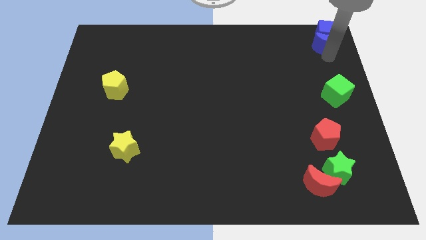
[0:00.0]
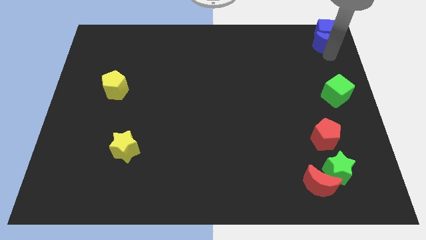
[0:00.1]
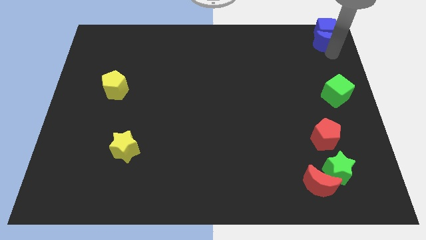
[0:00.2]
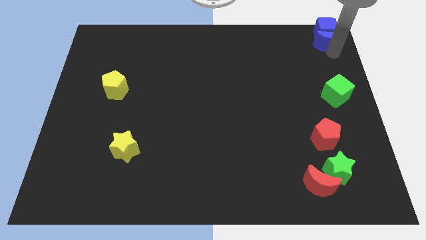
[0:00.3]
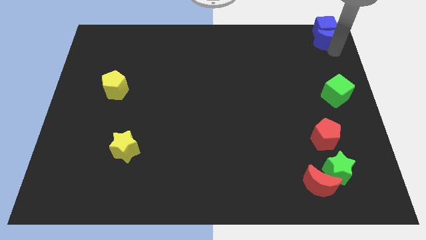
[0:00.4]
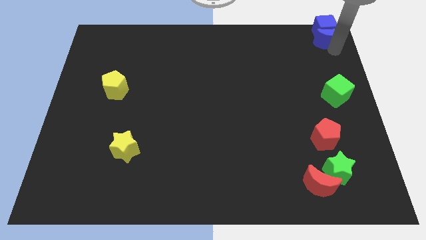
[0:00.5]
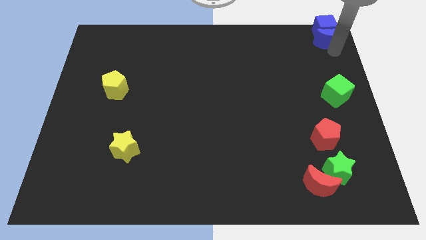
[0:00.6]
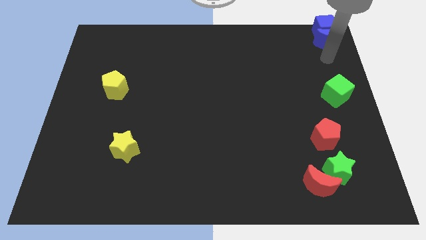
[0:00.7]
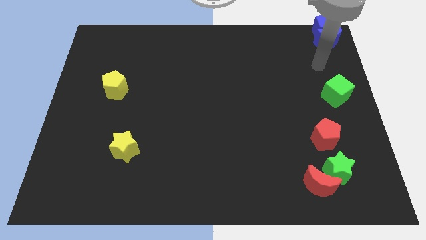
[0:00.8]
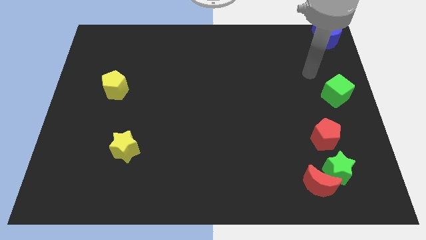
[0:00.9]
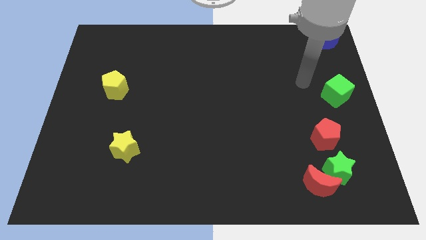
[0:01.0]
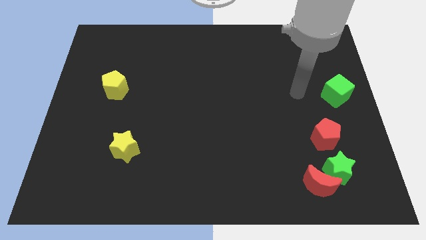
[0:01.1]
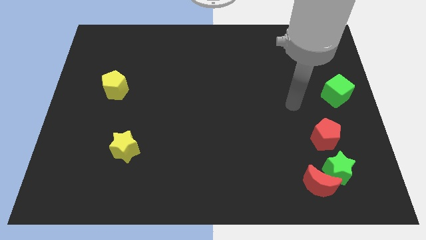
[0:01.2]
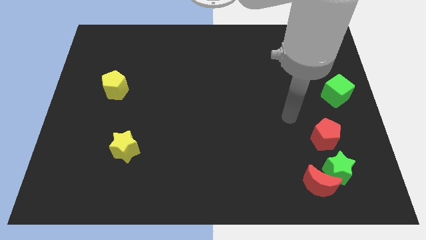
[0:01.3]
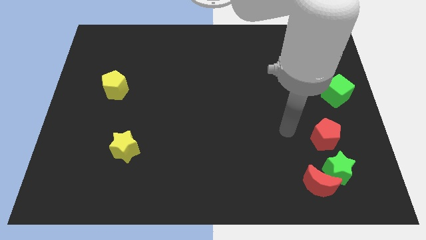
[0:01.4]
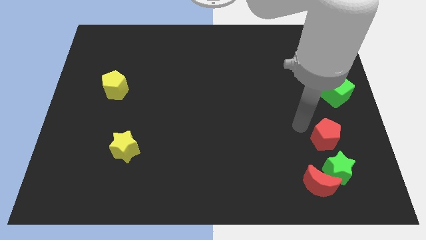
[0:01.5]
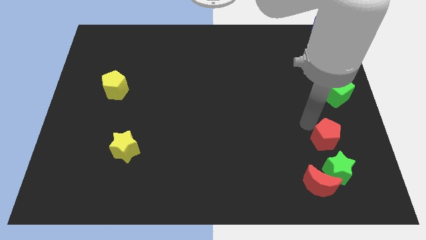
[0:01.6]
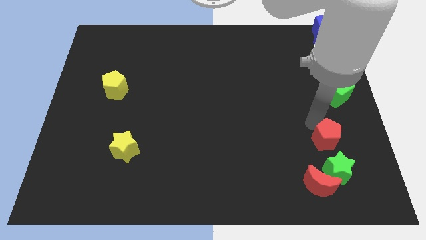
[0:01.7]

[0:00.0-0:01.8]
place blue blocks at the top right corner

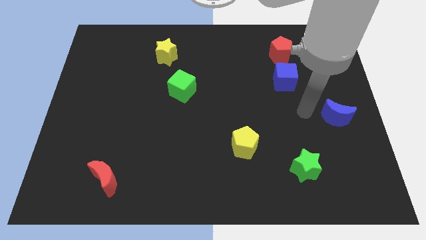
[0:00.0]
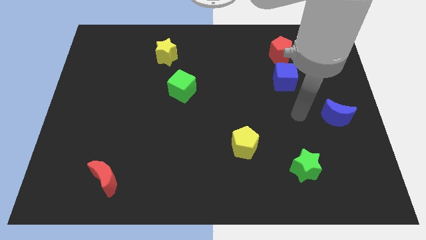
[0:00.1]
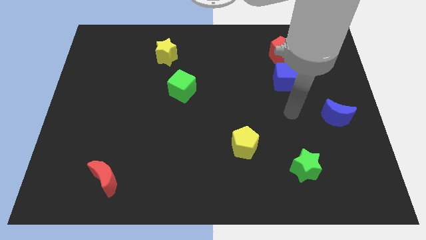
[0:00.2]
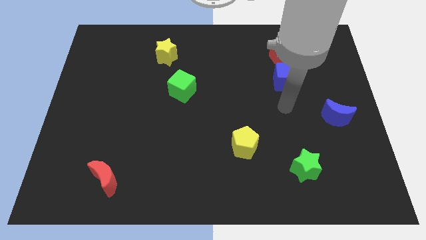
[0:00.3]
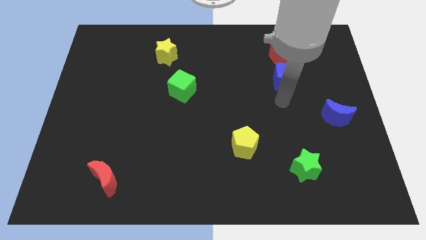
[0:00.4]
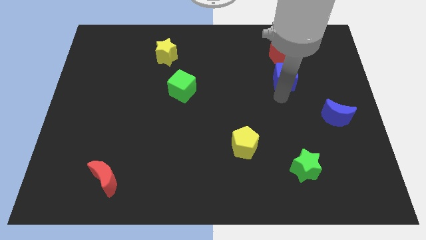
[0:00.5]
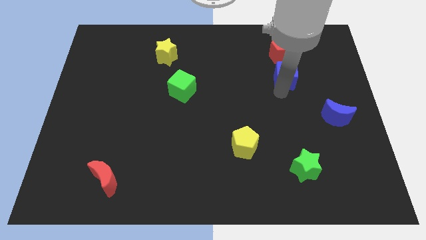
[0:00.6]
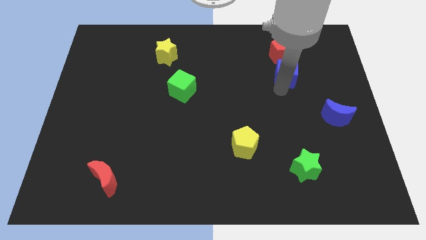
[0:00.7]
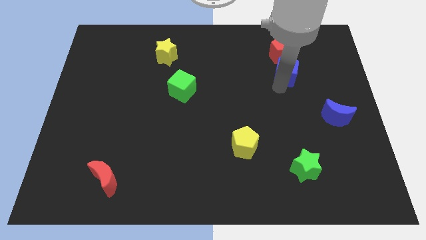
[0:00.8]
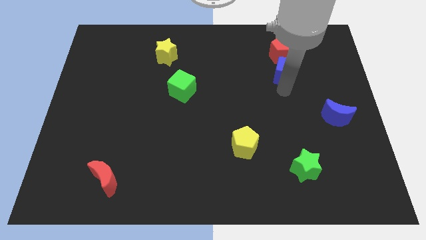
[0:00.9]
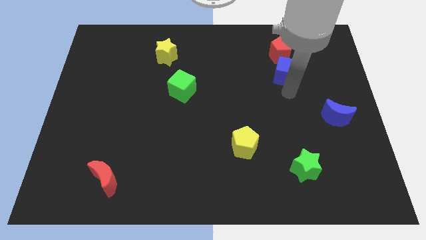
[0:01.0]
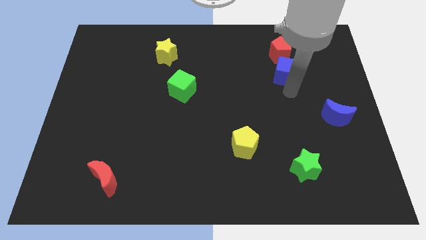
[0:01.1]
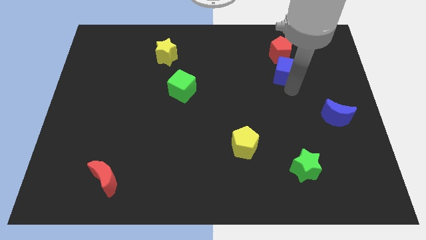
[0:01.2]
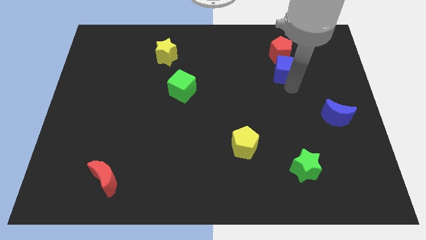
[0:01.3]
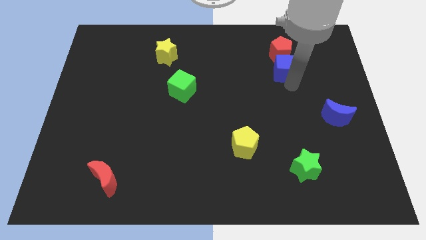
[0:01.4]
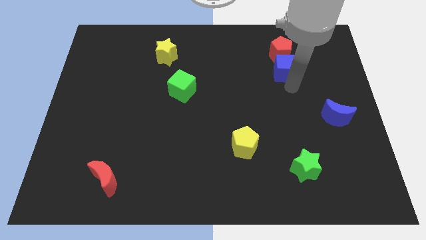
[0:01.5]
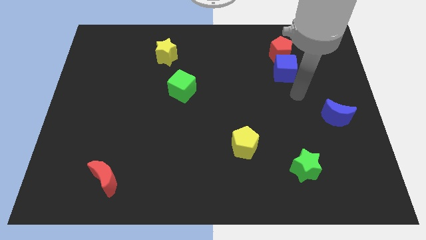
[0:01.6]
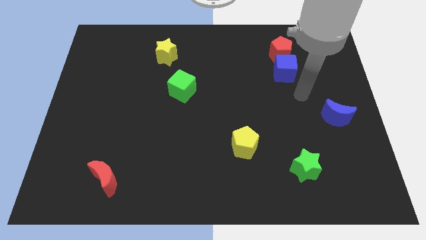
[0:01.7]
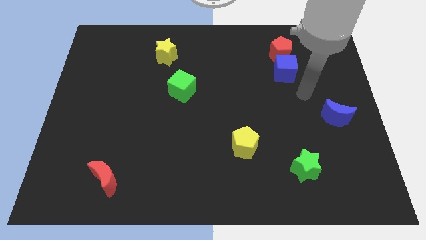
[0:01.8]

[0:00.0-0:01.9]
place the green cube below the red crescent

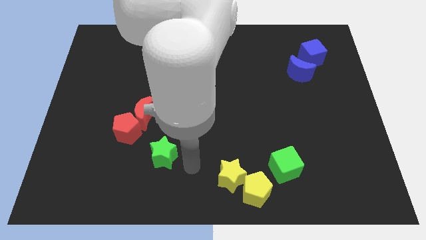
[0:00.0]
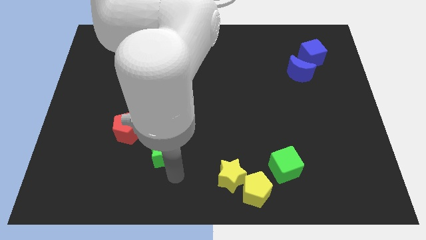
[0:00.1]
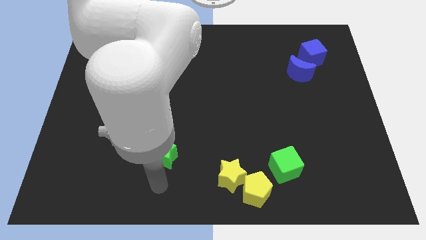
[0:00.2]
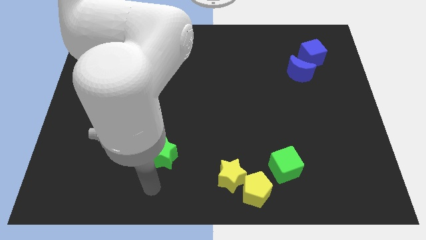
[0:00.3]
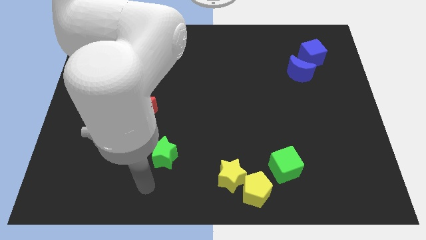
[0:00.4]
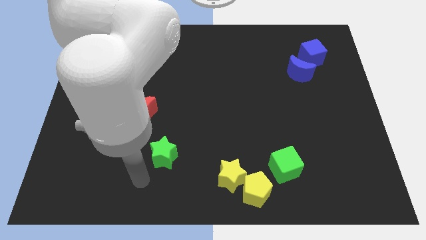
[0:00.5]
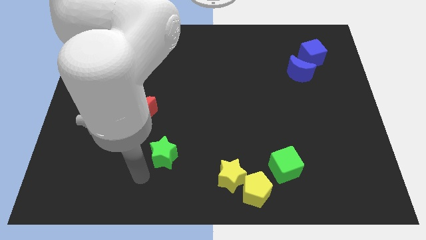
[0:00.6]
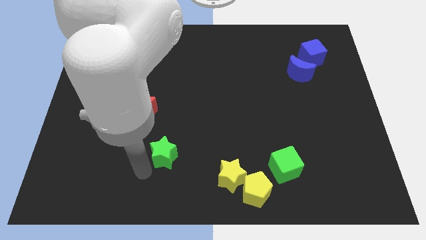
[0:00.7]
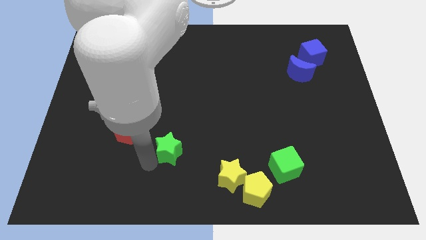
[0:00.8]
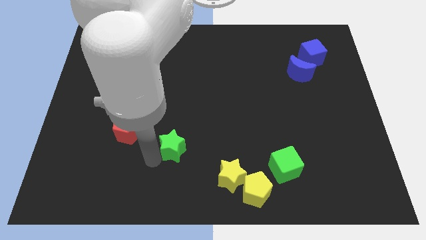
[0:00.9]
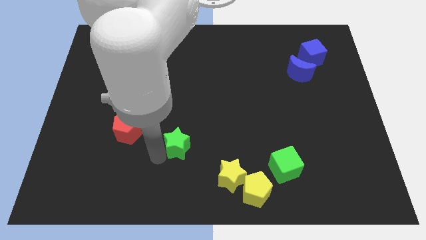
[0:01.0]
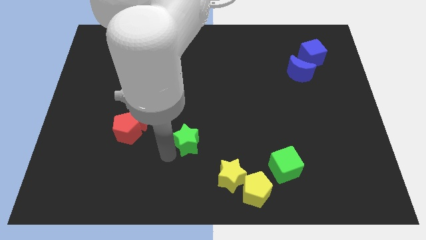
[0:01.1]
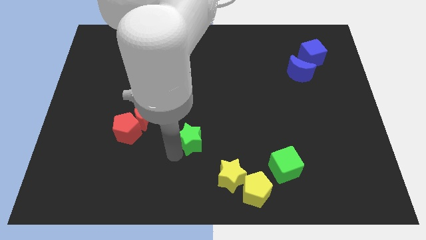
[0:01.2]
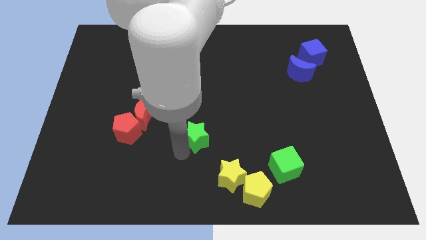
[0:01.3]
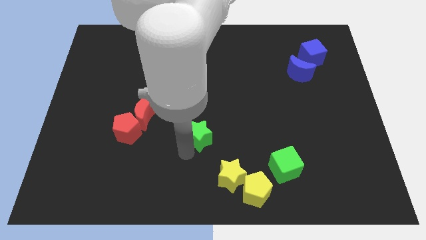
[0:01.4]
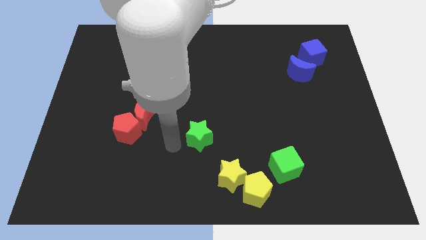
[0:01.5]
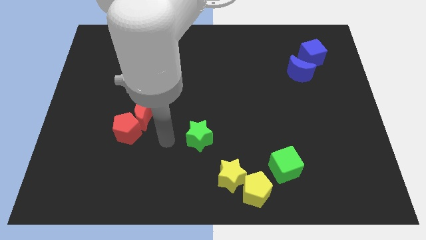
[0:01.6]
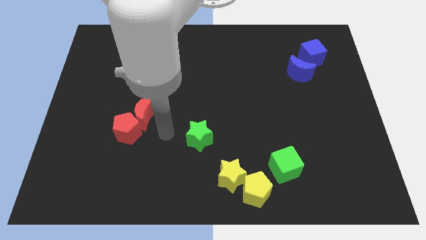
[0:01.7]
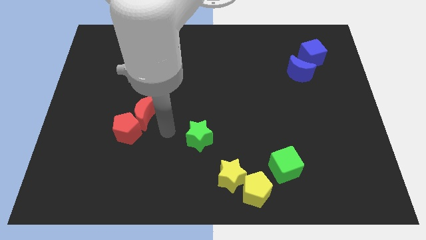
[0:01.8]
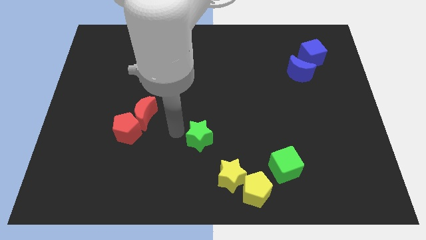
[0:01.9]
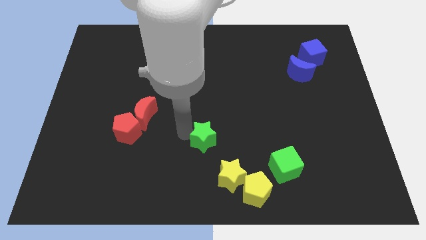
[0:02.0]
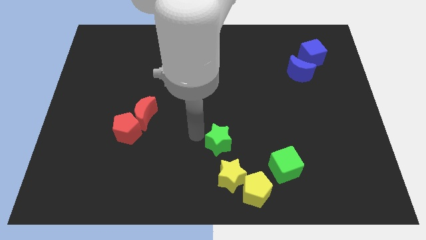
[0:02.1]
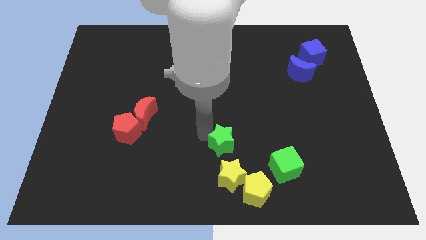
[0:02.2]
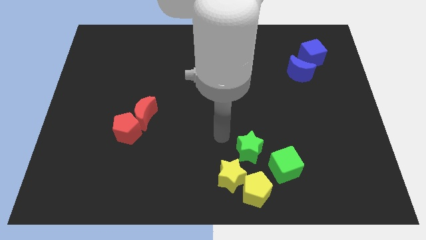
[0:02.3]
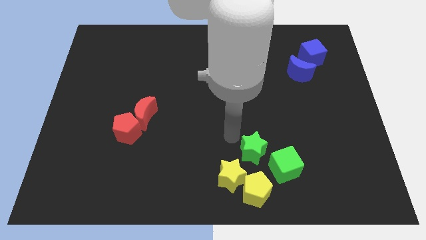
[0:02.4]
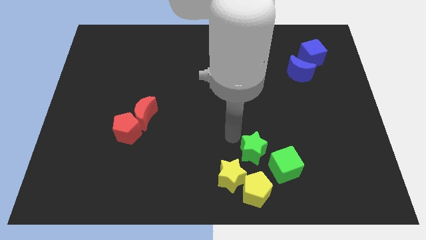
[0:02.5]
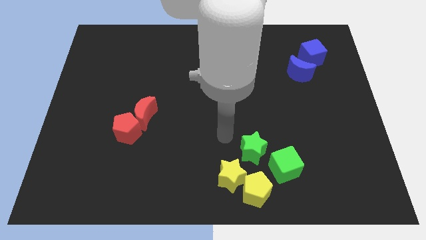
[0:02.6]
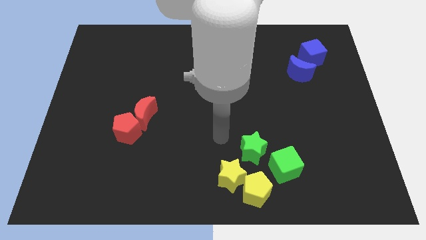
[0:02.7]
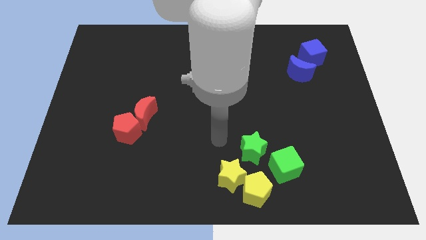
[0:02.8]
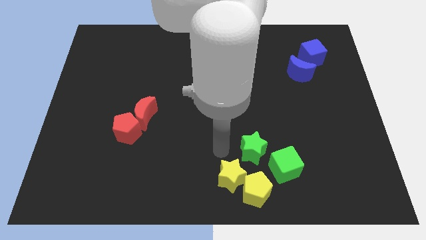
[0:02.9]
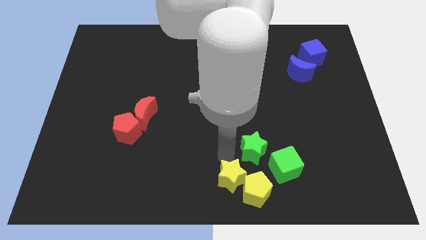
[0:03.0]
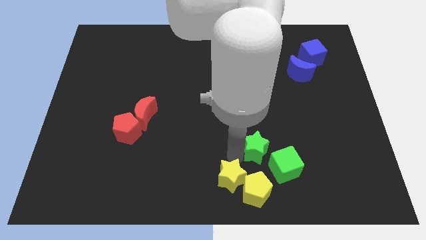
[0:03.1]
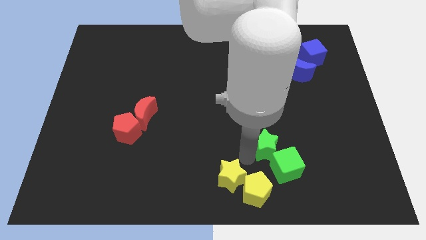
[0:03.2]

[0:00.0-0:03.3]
push green star in to green cube

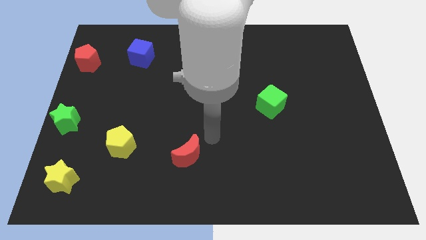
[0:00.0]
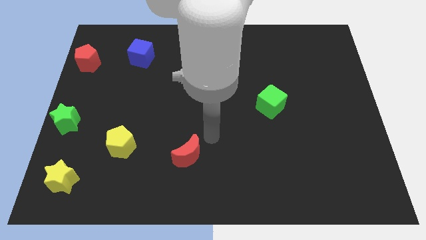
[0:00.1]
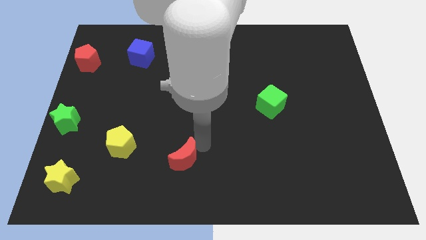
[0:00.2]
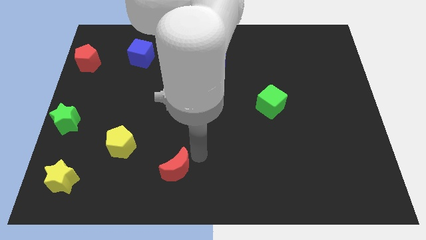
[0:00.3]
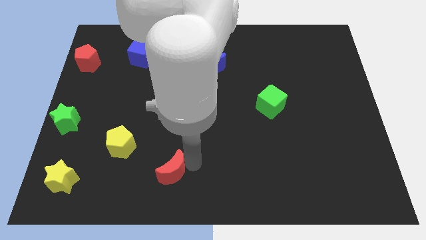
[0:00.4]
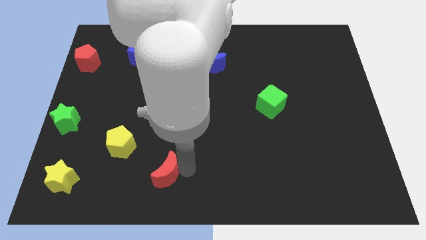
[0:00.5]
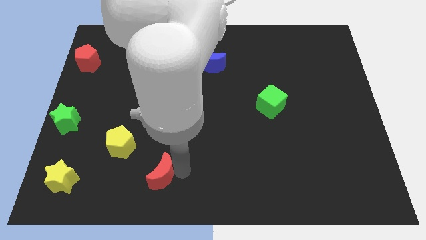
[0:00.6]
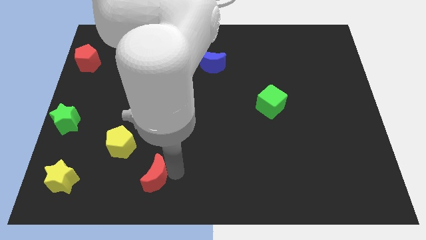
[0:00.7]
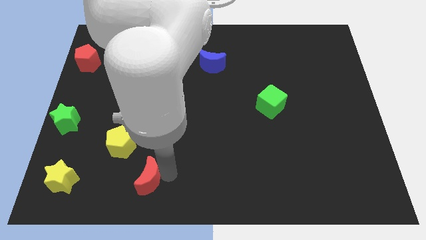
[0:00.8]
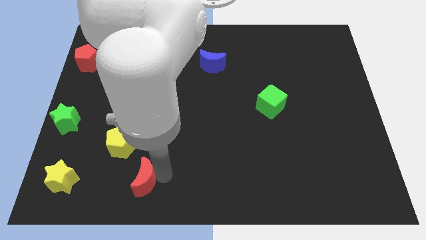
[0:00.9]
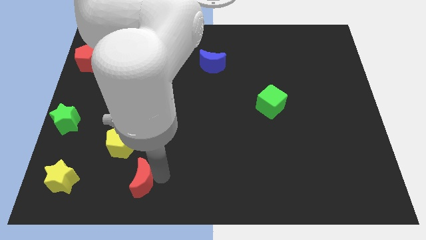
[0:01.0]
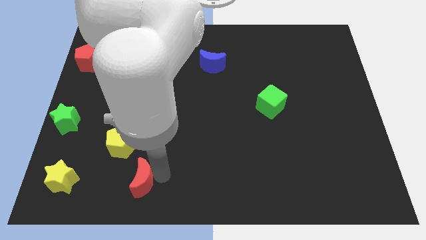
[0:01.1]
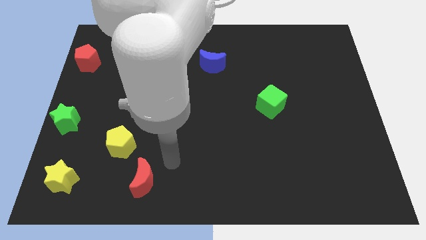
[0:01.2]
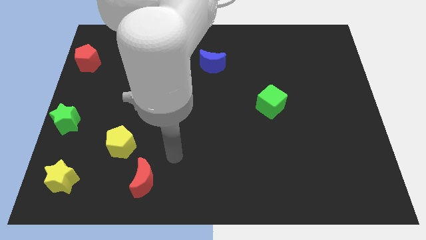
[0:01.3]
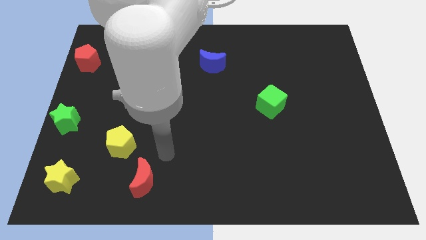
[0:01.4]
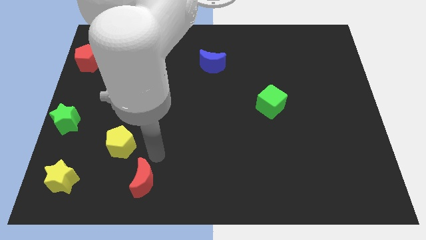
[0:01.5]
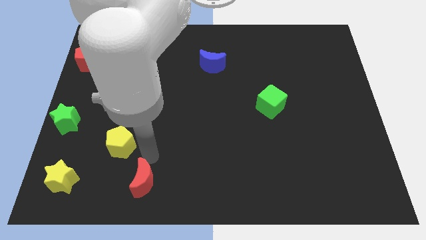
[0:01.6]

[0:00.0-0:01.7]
move the red moon to the right of the yellow star

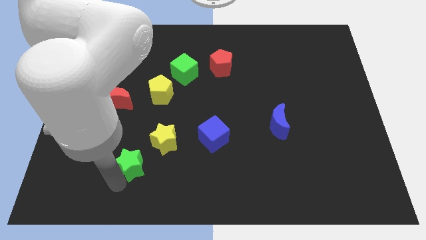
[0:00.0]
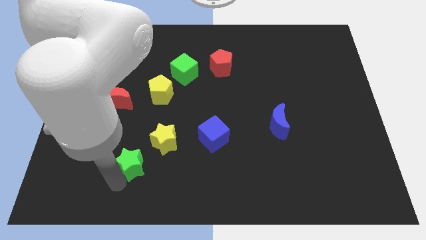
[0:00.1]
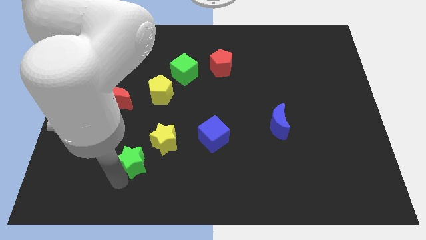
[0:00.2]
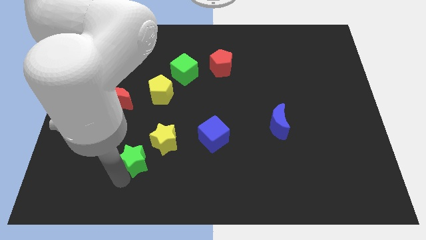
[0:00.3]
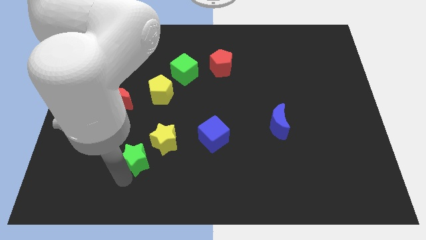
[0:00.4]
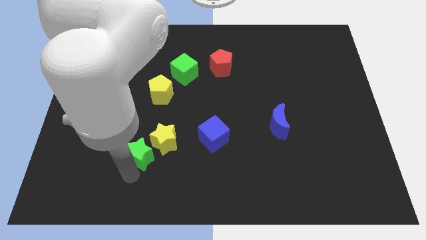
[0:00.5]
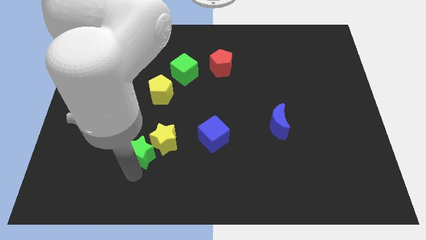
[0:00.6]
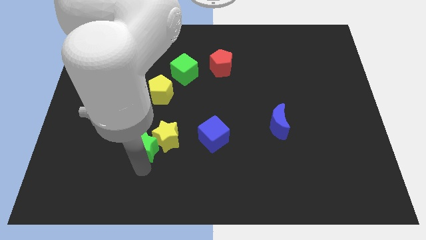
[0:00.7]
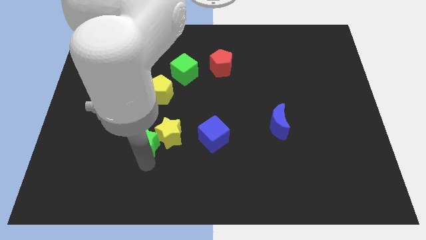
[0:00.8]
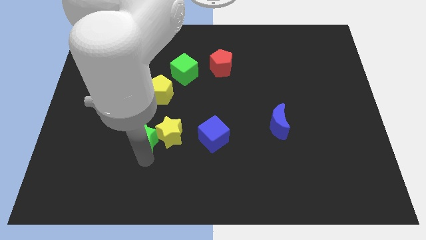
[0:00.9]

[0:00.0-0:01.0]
push green star in to yellow star
